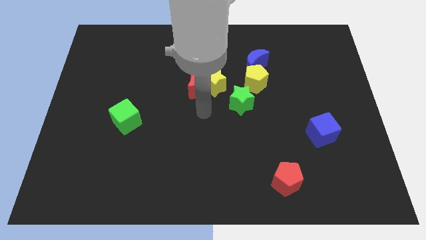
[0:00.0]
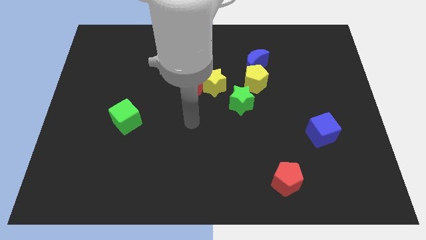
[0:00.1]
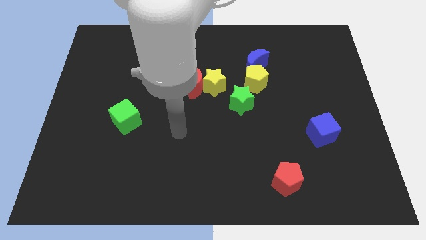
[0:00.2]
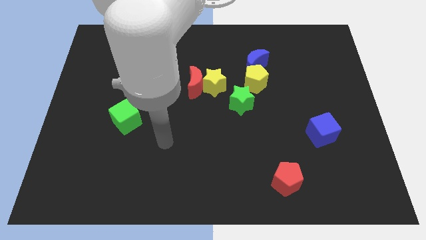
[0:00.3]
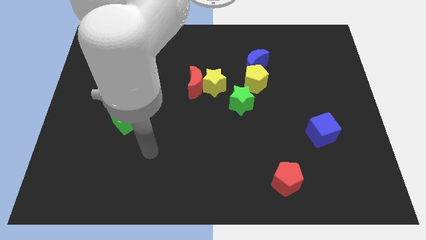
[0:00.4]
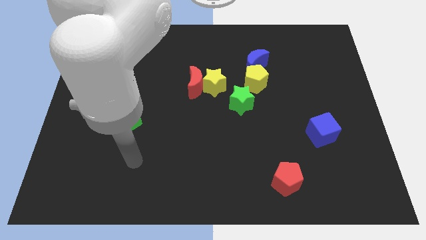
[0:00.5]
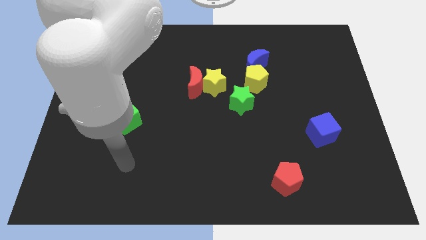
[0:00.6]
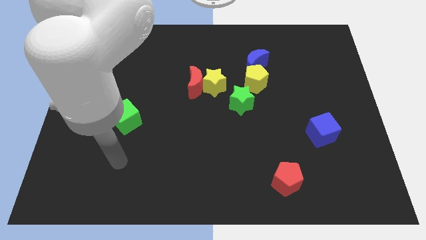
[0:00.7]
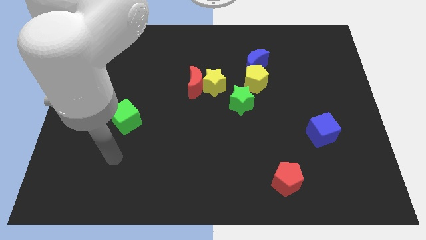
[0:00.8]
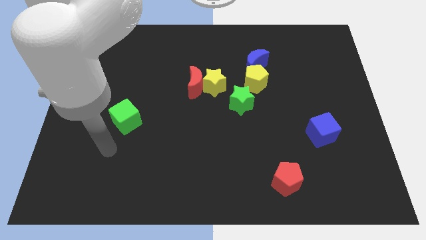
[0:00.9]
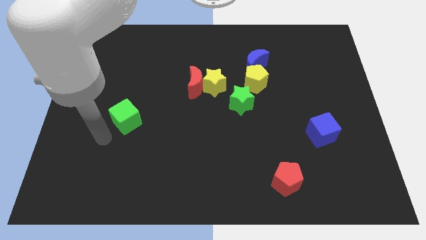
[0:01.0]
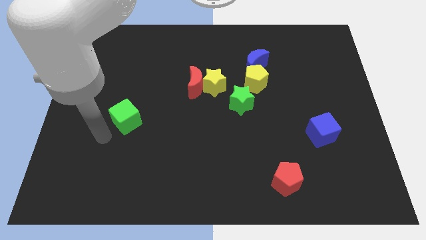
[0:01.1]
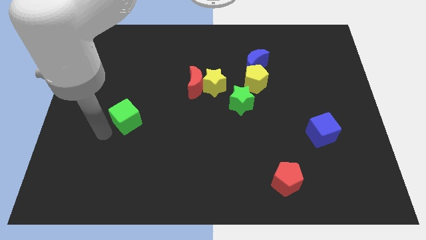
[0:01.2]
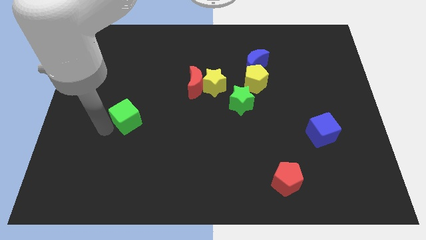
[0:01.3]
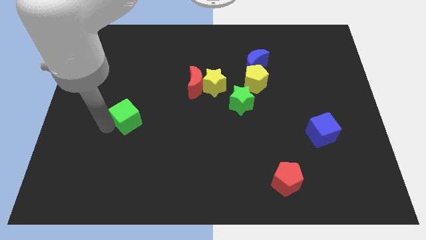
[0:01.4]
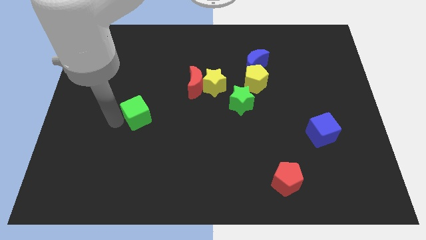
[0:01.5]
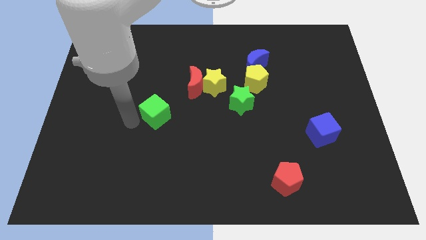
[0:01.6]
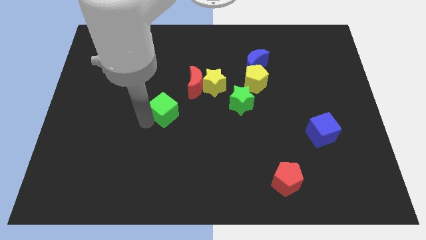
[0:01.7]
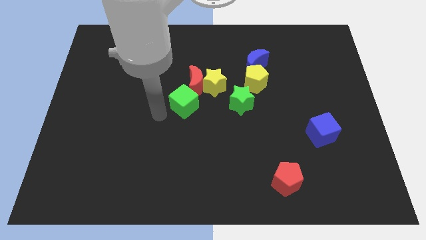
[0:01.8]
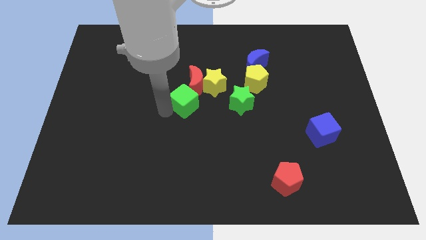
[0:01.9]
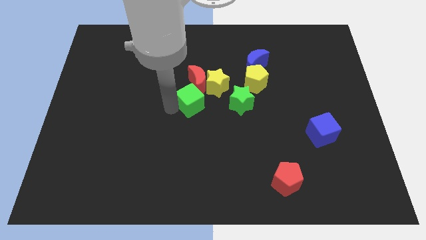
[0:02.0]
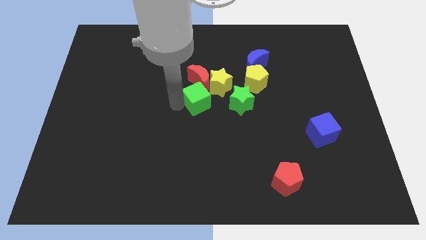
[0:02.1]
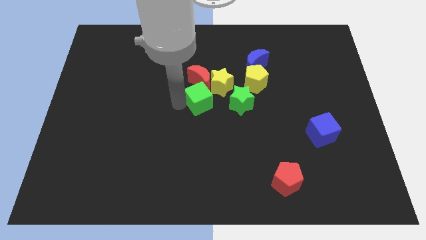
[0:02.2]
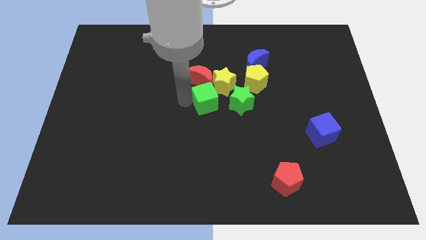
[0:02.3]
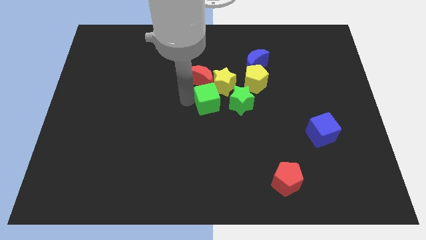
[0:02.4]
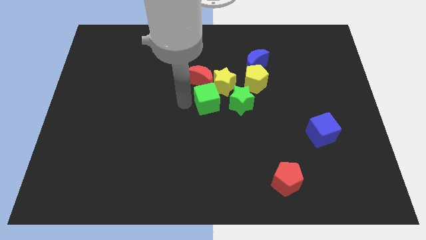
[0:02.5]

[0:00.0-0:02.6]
place the green cube below the red moon

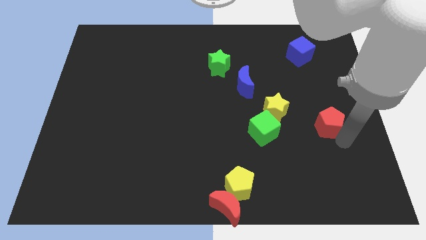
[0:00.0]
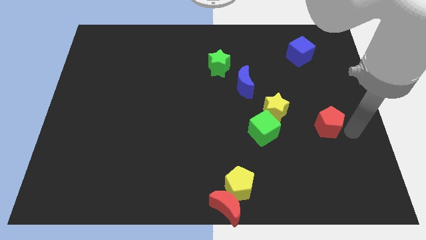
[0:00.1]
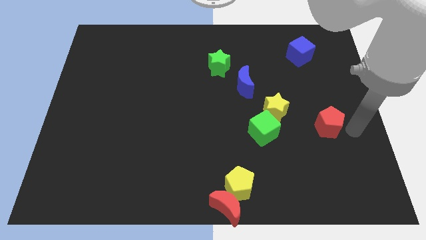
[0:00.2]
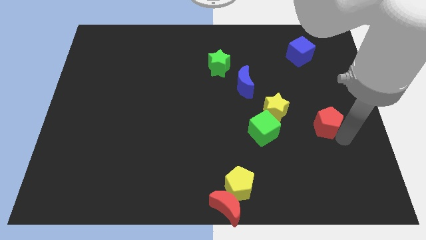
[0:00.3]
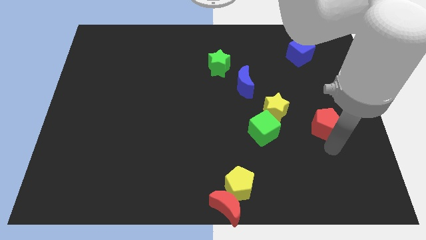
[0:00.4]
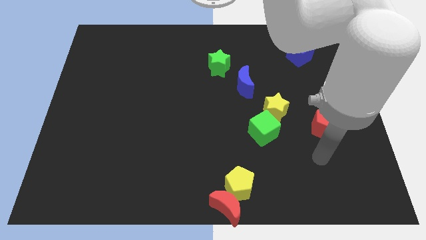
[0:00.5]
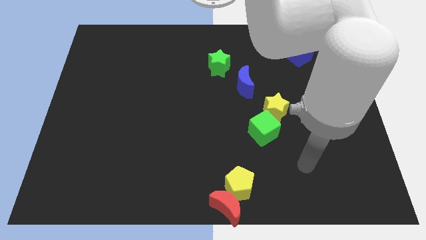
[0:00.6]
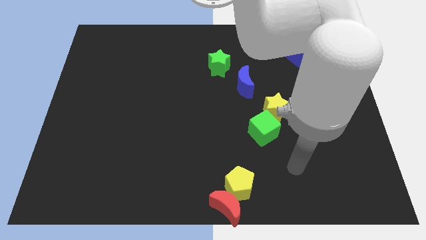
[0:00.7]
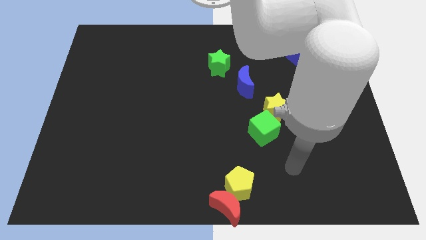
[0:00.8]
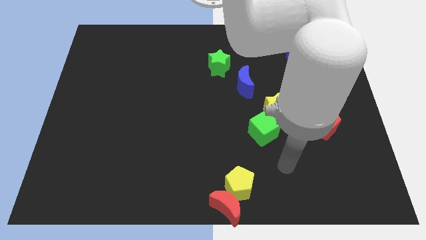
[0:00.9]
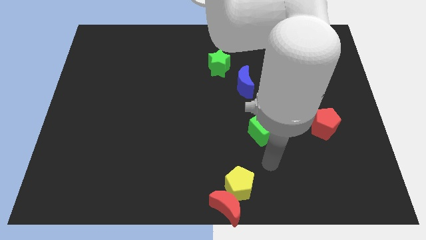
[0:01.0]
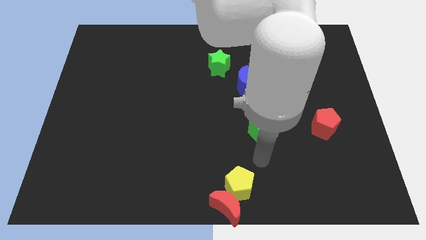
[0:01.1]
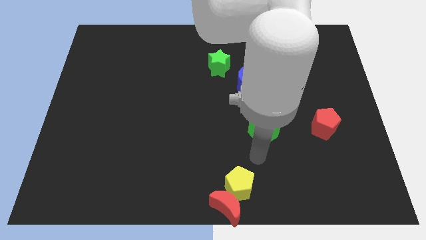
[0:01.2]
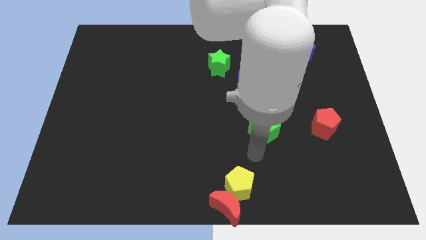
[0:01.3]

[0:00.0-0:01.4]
slightly push the red pentagon parallel to green cube

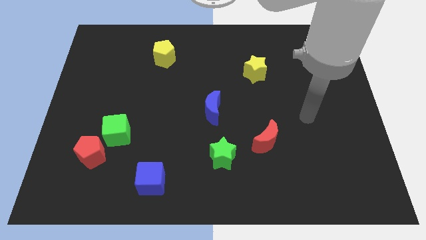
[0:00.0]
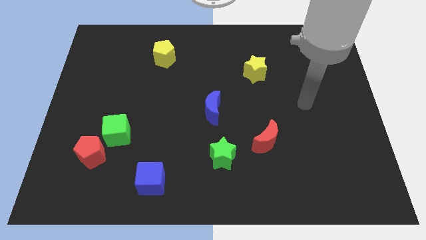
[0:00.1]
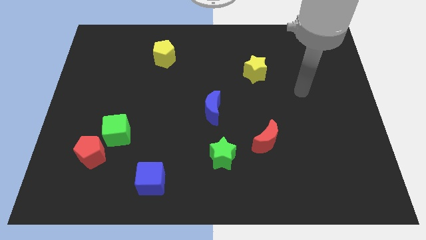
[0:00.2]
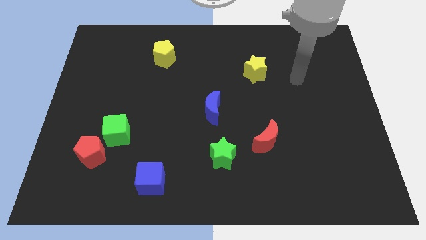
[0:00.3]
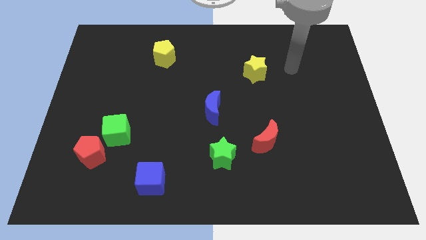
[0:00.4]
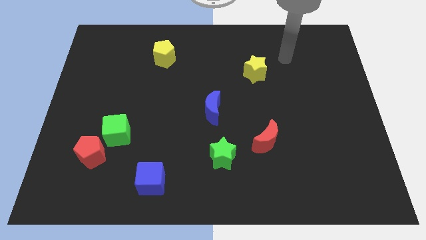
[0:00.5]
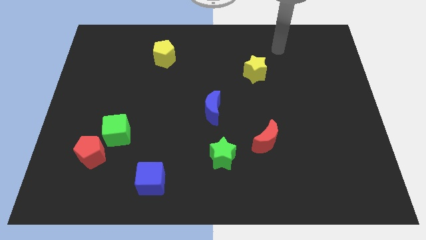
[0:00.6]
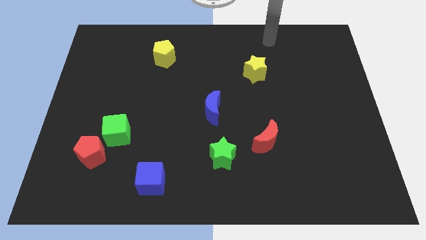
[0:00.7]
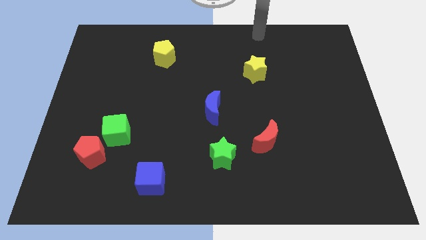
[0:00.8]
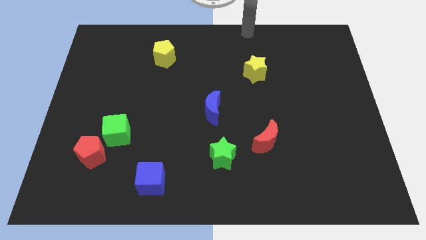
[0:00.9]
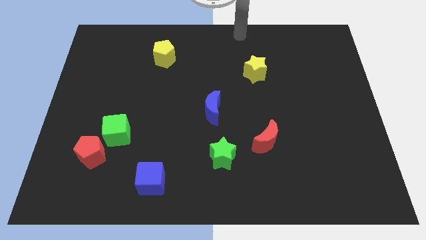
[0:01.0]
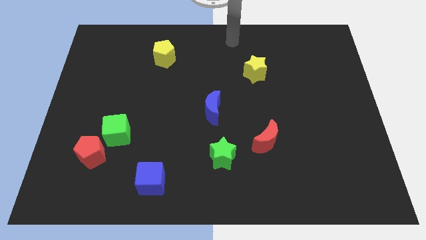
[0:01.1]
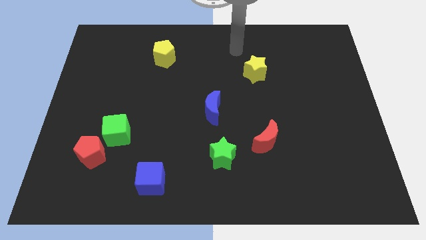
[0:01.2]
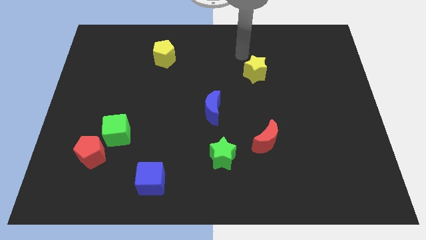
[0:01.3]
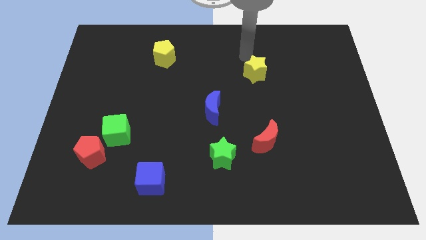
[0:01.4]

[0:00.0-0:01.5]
point your arm at the top left side of the yellow star

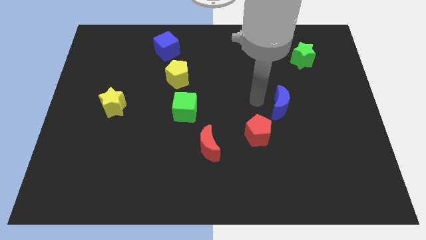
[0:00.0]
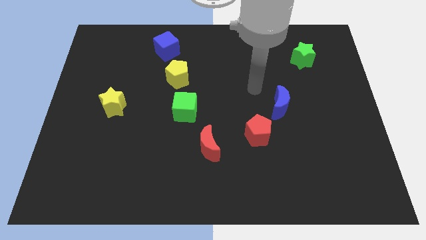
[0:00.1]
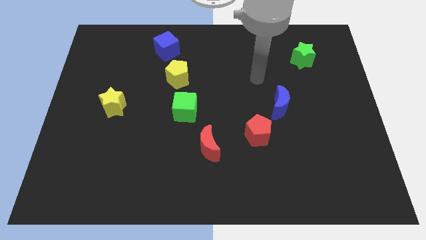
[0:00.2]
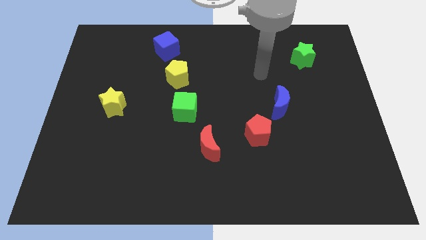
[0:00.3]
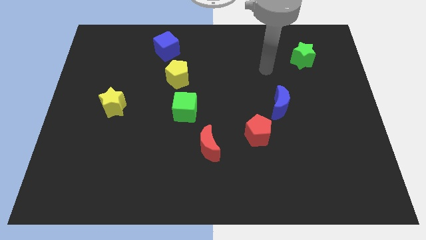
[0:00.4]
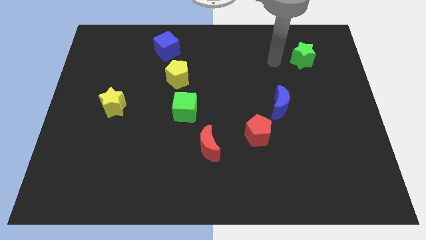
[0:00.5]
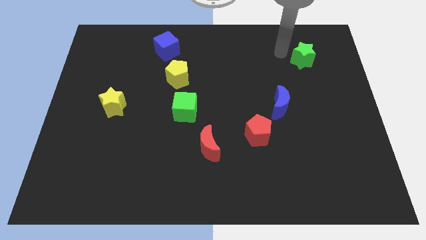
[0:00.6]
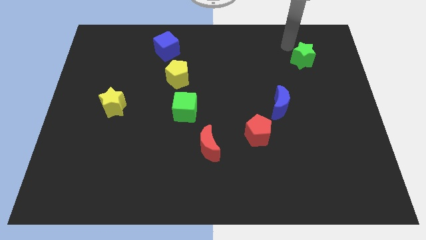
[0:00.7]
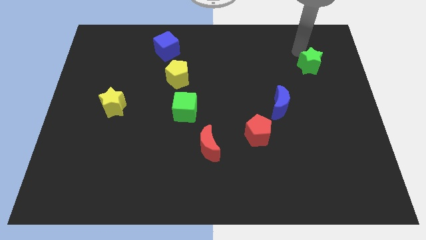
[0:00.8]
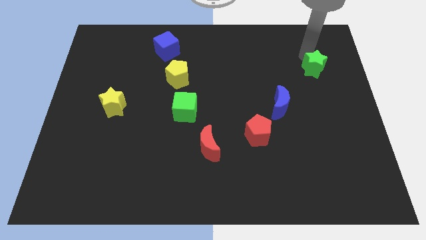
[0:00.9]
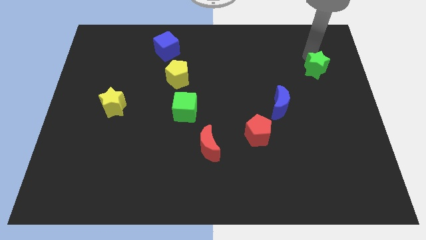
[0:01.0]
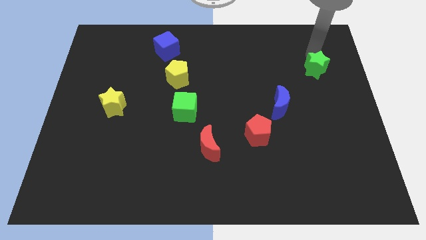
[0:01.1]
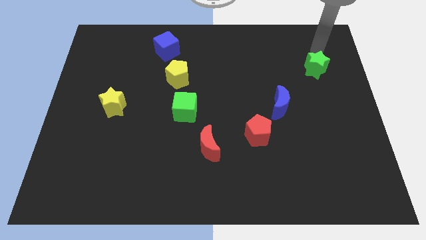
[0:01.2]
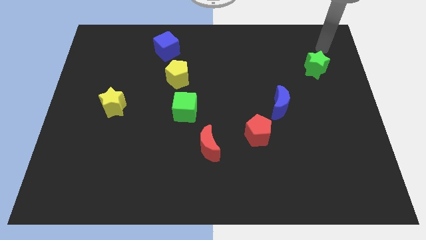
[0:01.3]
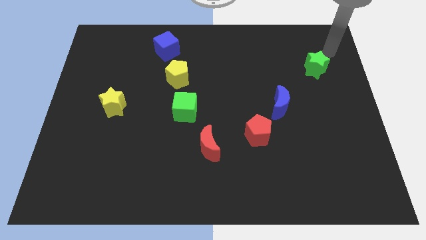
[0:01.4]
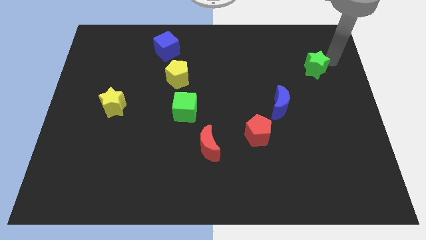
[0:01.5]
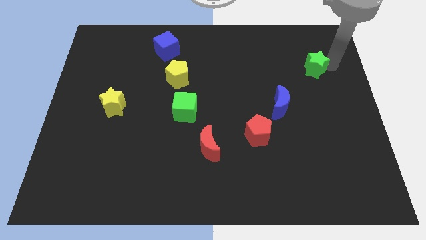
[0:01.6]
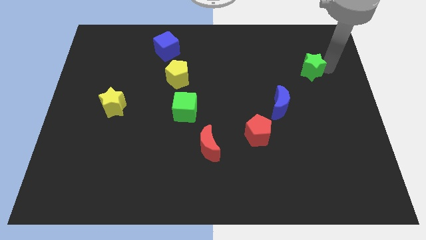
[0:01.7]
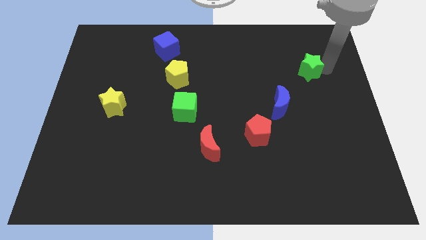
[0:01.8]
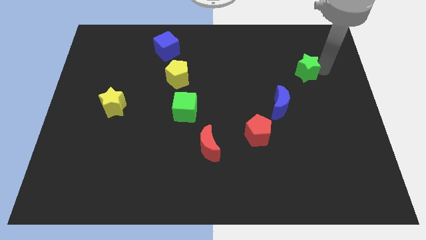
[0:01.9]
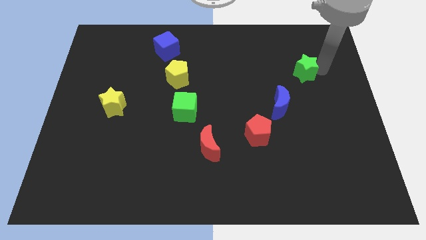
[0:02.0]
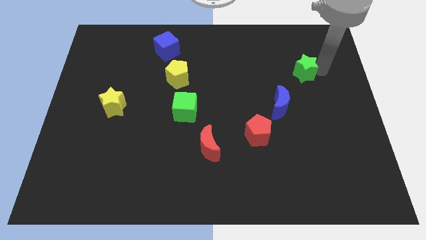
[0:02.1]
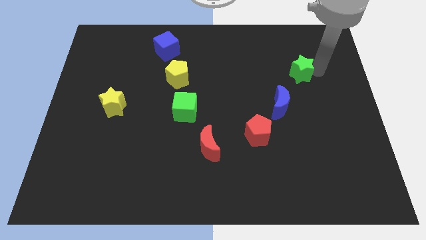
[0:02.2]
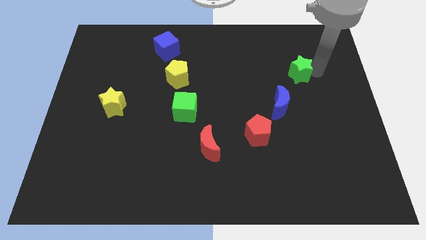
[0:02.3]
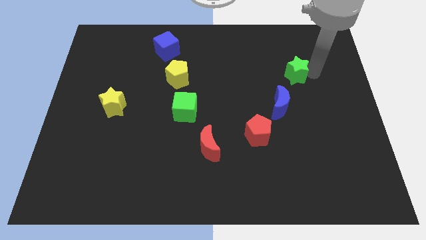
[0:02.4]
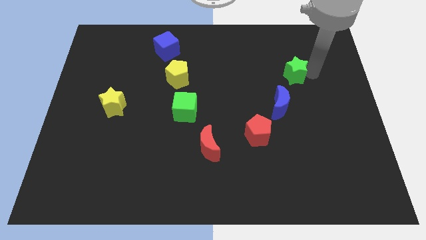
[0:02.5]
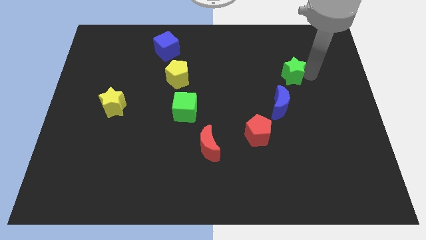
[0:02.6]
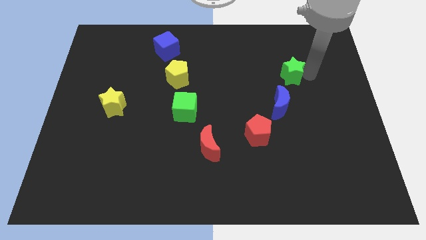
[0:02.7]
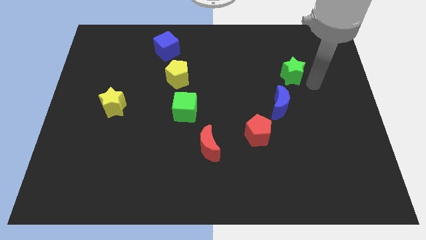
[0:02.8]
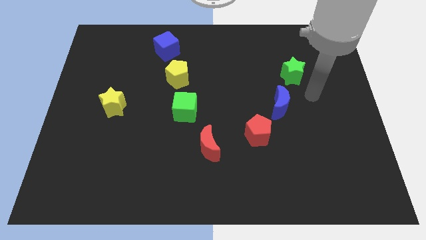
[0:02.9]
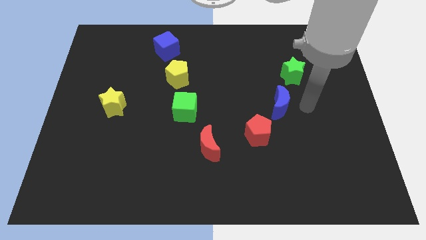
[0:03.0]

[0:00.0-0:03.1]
put the green star at the top right side of blue crescent

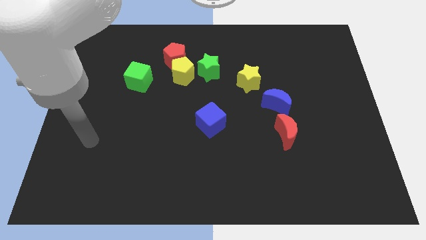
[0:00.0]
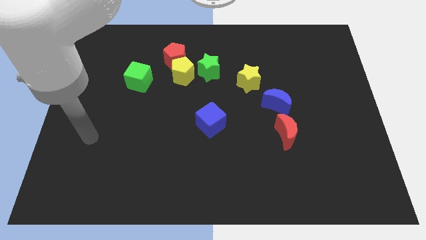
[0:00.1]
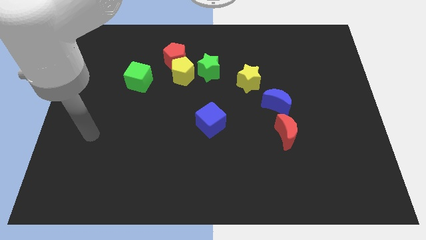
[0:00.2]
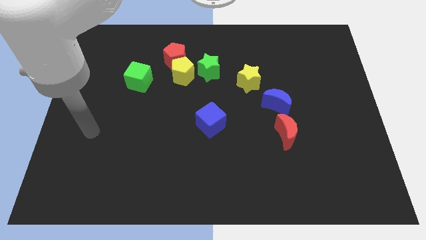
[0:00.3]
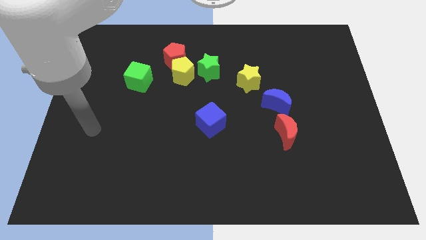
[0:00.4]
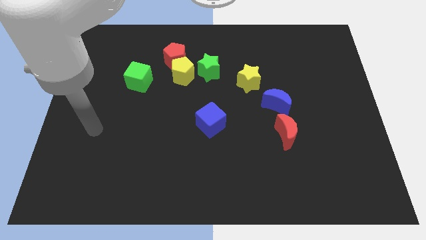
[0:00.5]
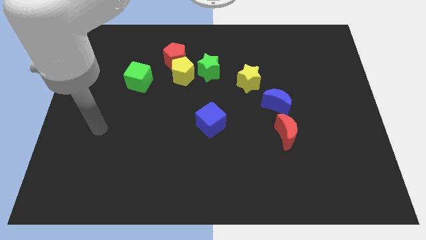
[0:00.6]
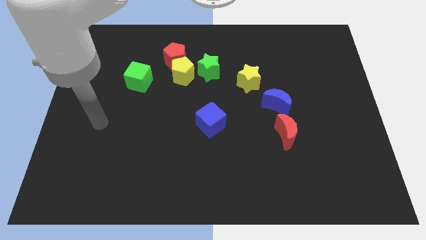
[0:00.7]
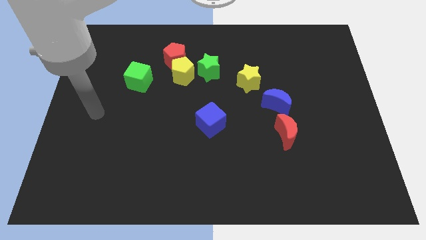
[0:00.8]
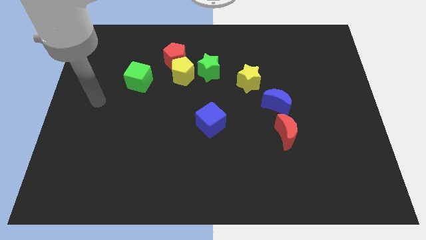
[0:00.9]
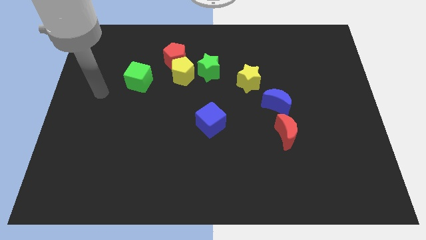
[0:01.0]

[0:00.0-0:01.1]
move your arm to left of green cube
